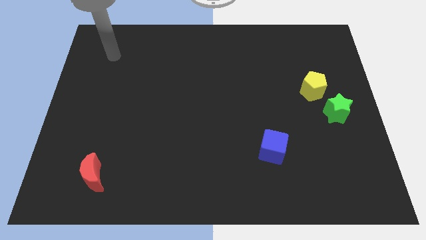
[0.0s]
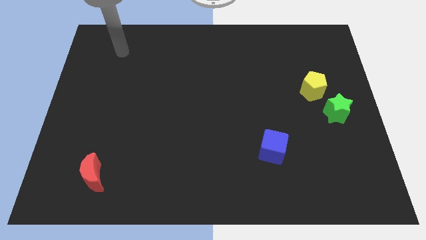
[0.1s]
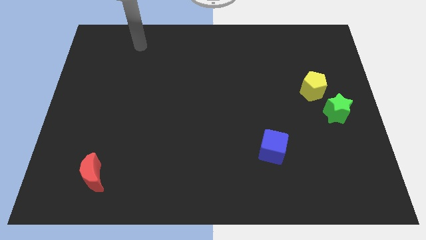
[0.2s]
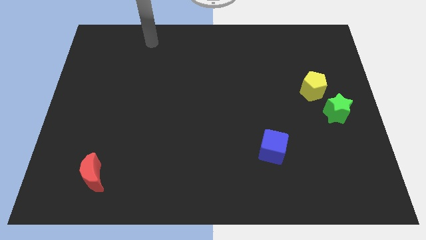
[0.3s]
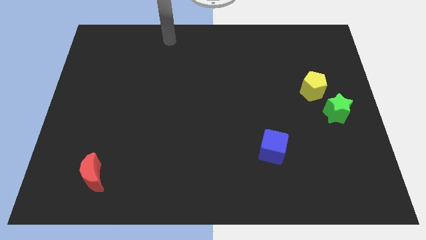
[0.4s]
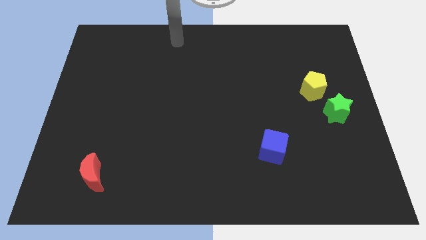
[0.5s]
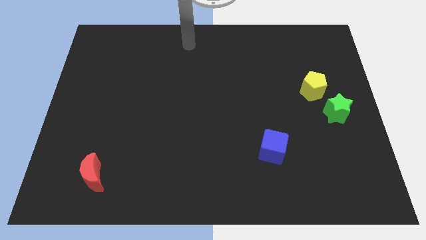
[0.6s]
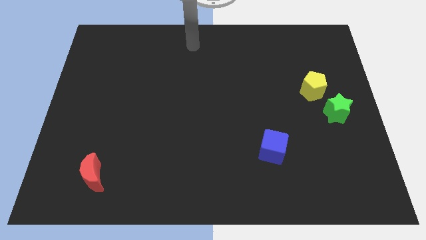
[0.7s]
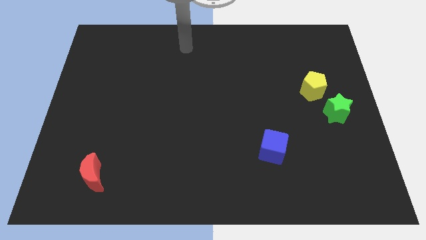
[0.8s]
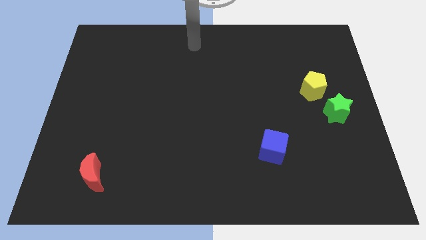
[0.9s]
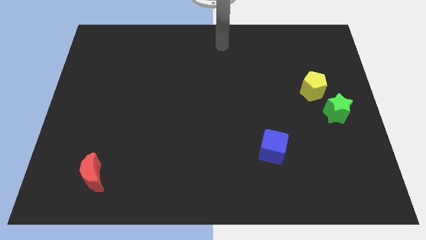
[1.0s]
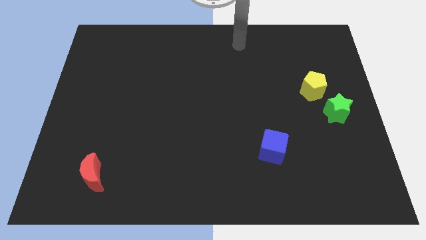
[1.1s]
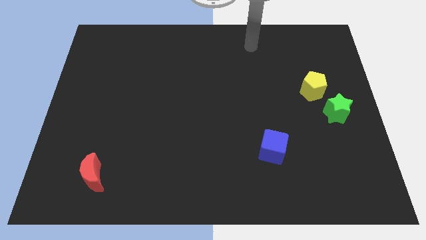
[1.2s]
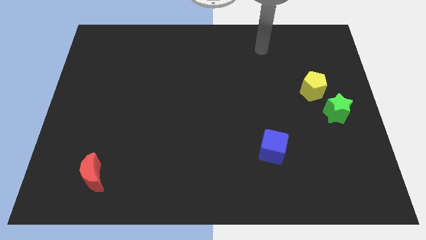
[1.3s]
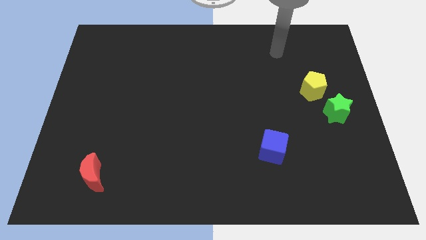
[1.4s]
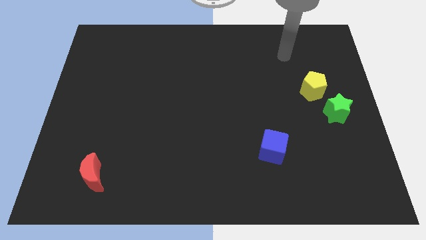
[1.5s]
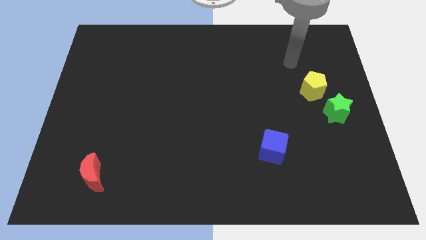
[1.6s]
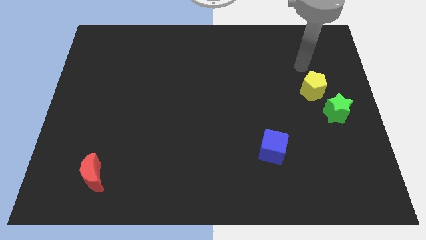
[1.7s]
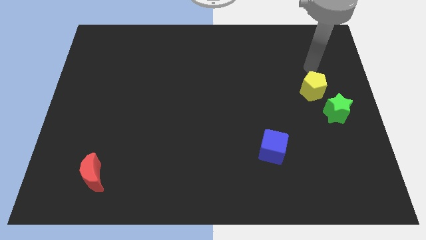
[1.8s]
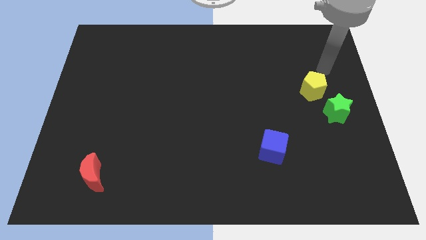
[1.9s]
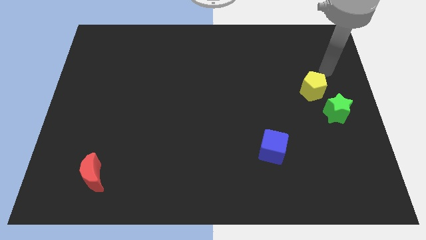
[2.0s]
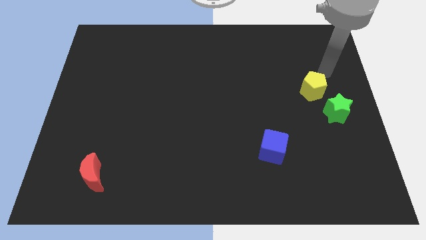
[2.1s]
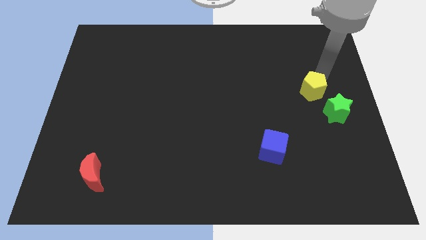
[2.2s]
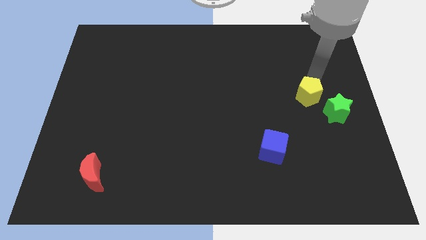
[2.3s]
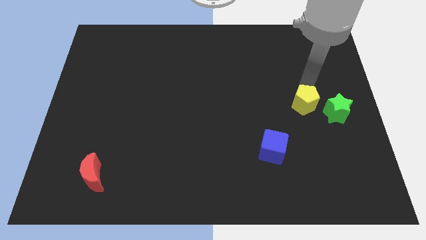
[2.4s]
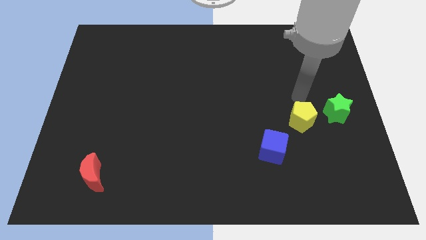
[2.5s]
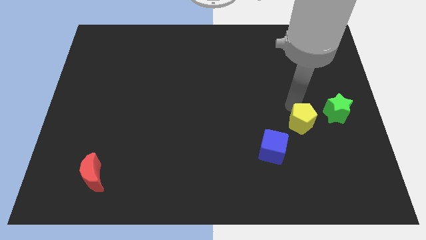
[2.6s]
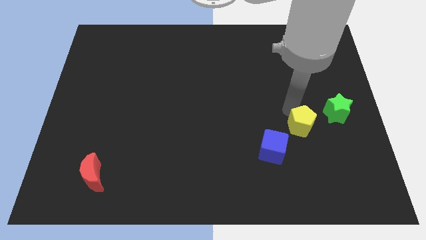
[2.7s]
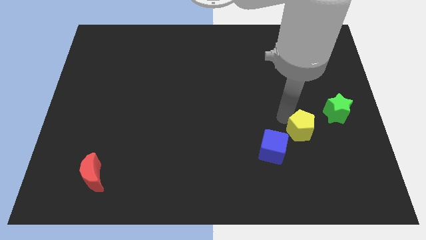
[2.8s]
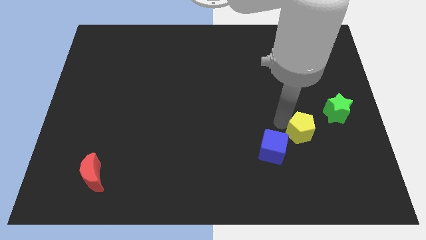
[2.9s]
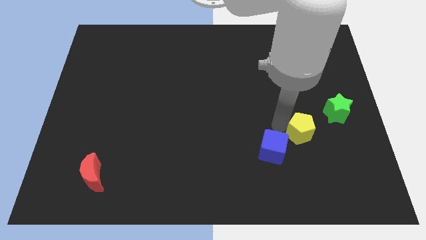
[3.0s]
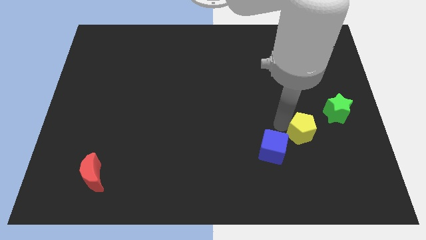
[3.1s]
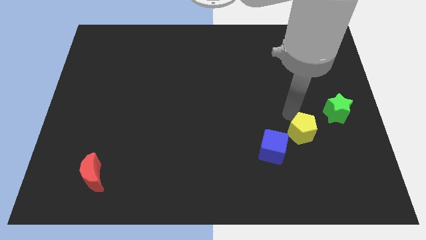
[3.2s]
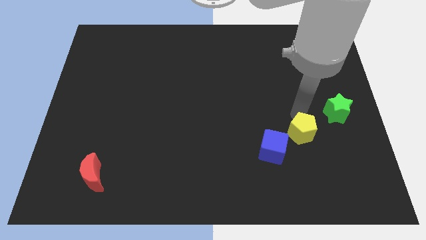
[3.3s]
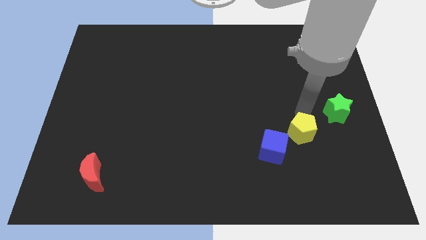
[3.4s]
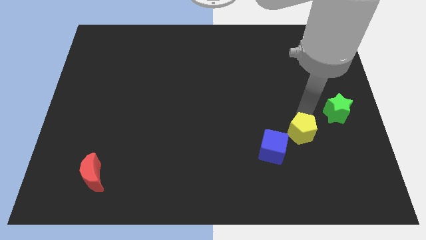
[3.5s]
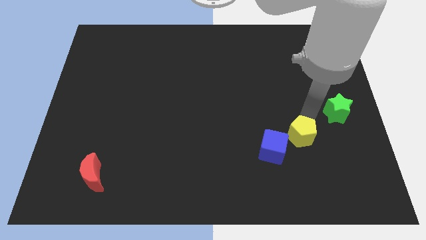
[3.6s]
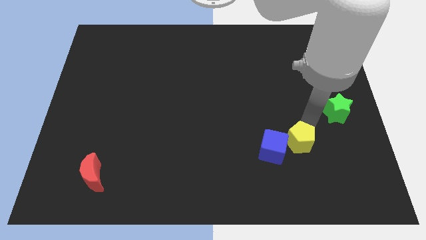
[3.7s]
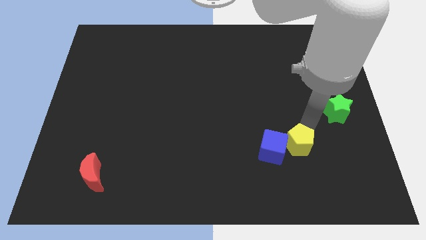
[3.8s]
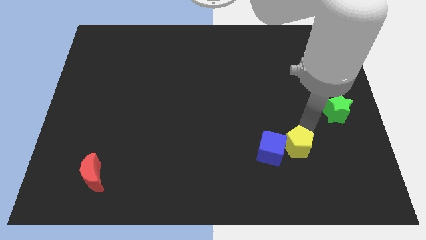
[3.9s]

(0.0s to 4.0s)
put the pentagon to the blue block

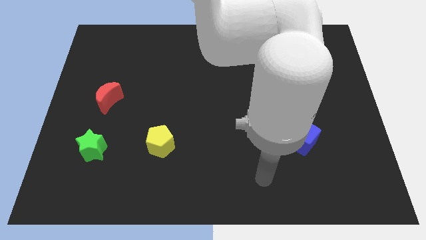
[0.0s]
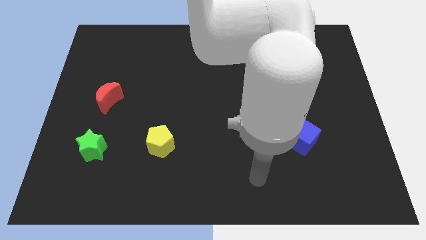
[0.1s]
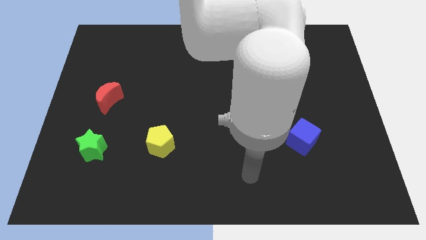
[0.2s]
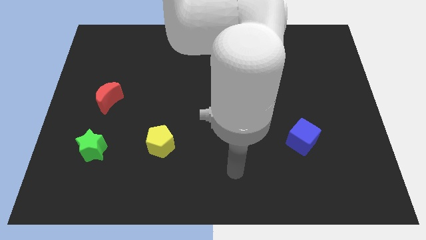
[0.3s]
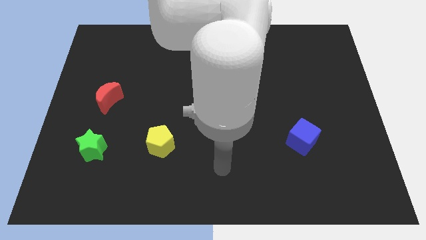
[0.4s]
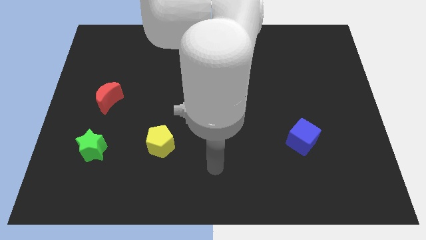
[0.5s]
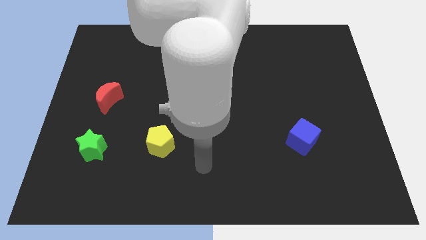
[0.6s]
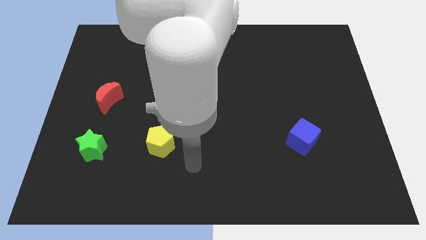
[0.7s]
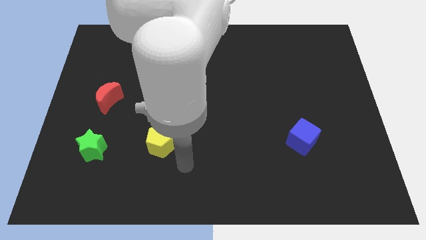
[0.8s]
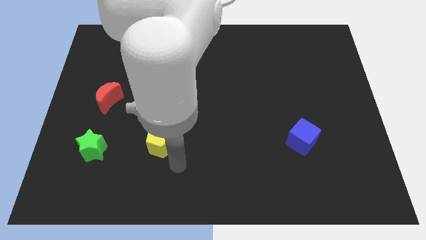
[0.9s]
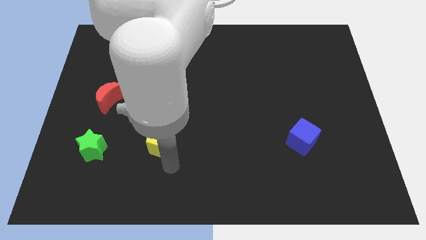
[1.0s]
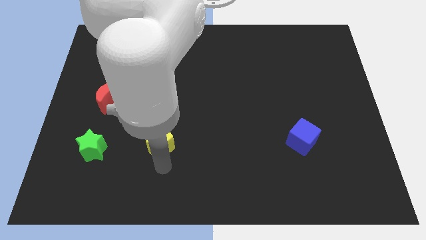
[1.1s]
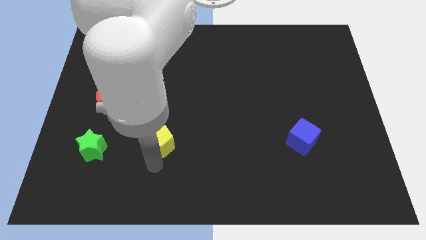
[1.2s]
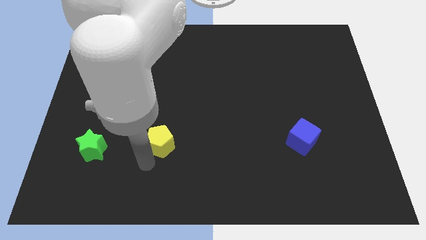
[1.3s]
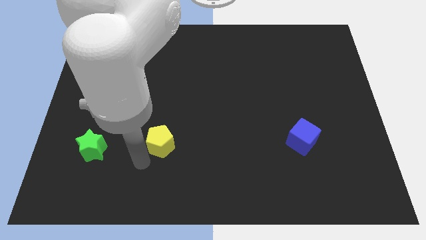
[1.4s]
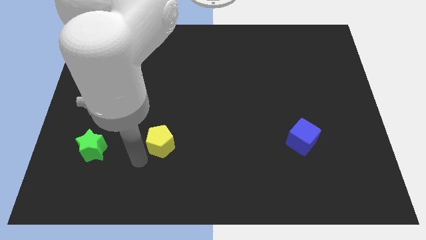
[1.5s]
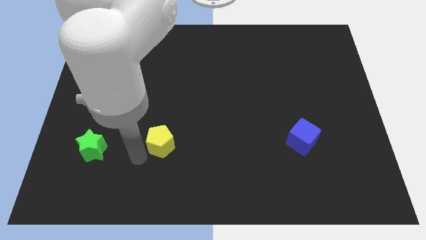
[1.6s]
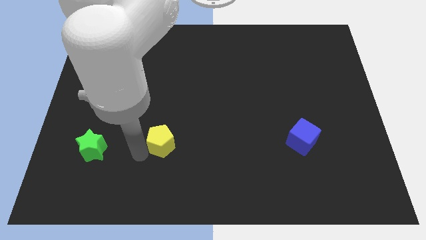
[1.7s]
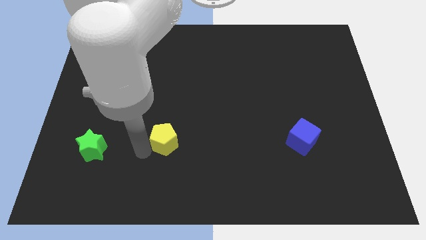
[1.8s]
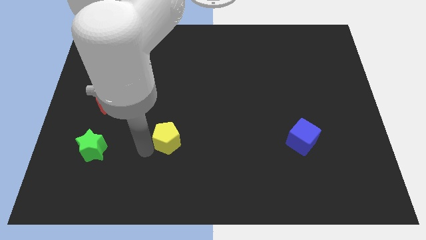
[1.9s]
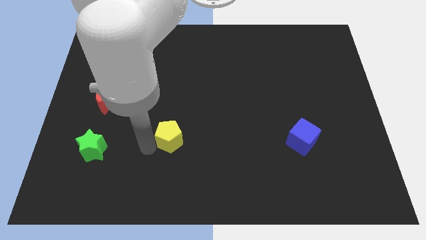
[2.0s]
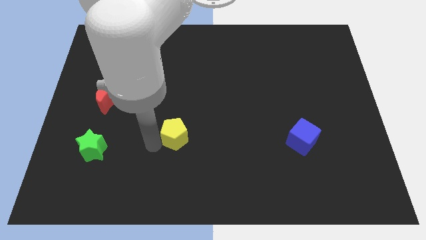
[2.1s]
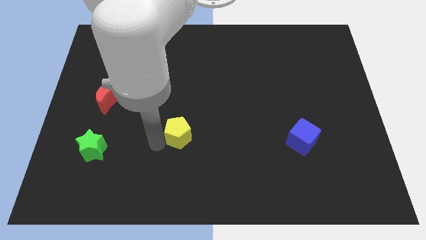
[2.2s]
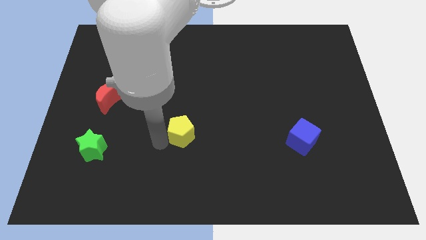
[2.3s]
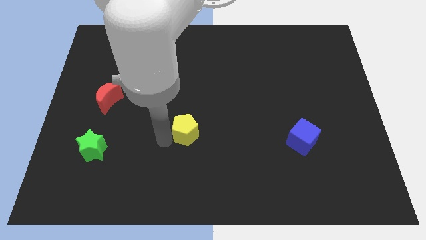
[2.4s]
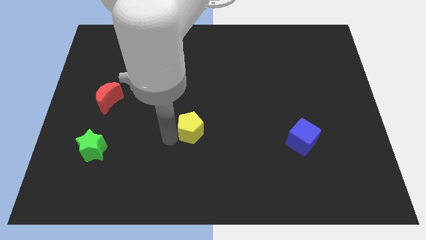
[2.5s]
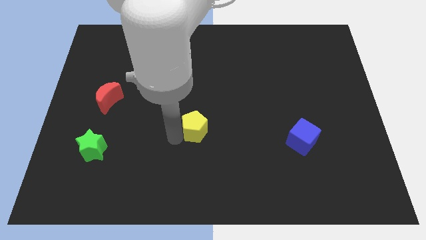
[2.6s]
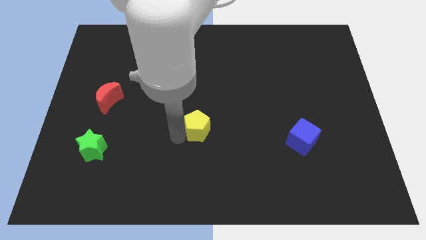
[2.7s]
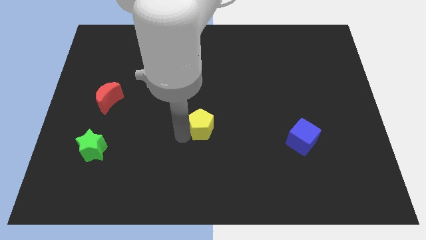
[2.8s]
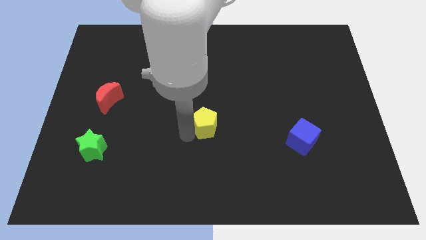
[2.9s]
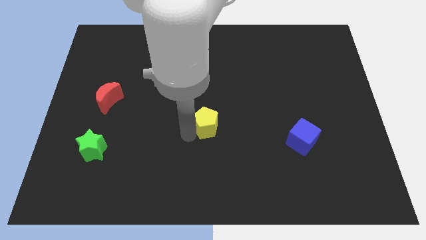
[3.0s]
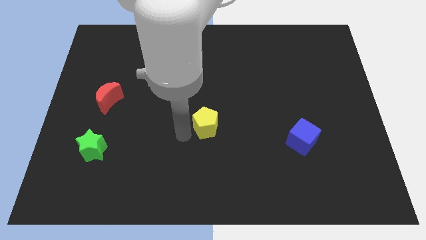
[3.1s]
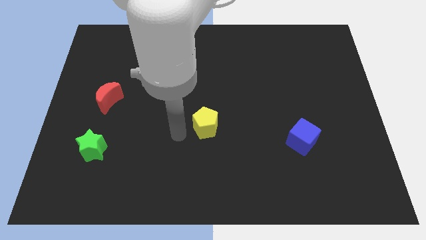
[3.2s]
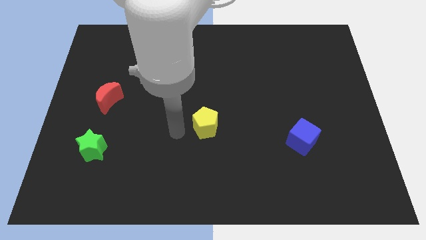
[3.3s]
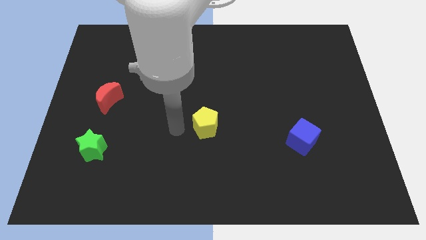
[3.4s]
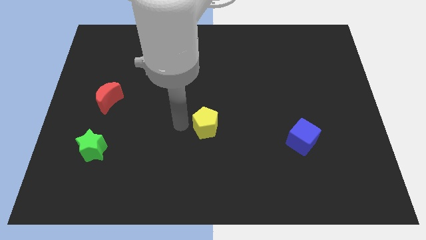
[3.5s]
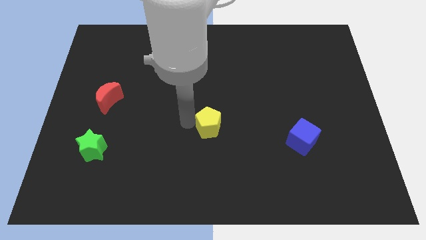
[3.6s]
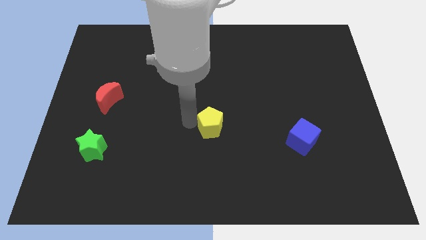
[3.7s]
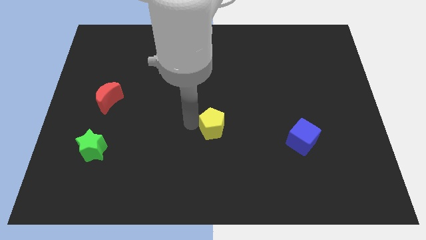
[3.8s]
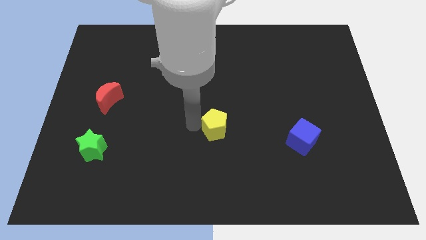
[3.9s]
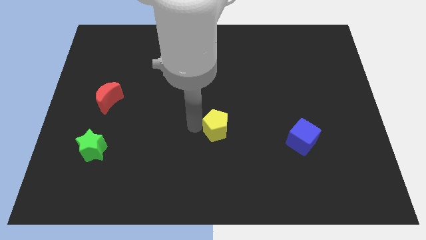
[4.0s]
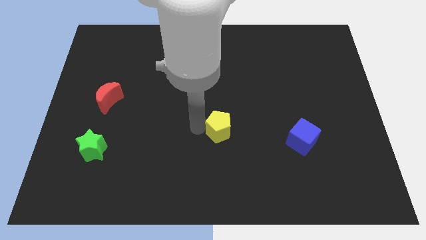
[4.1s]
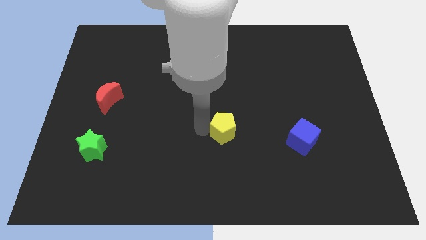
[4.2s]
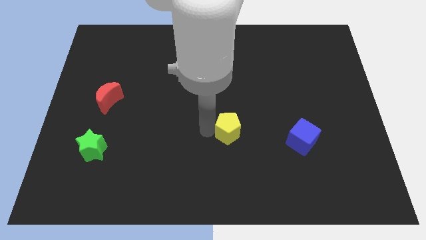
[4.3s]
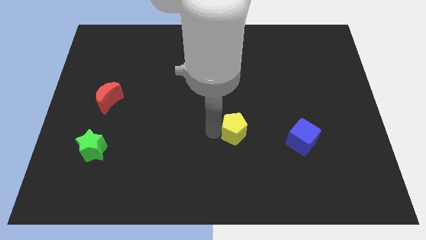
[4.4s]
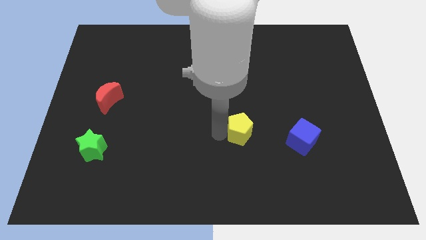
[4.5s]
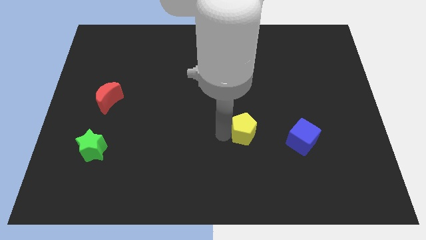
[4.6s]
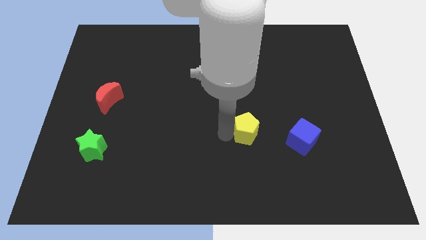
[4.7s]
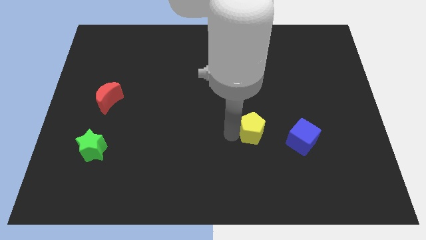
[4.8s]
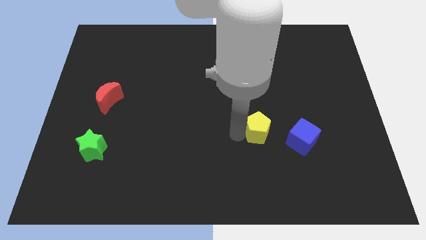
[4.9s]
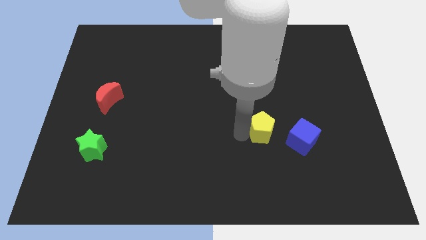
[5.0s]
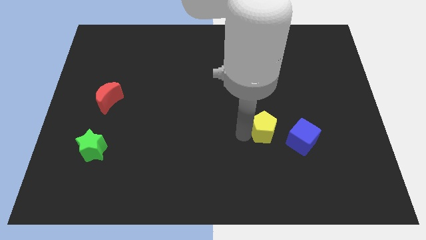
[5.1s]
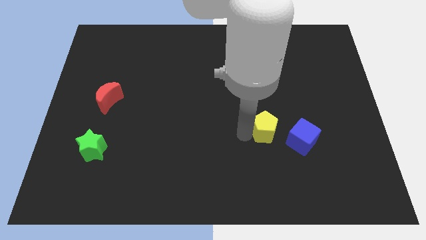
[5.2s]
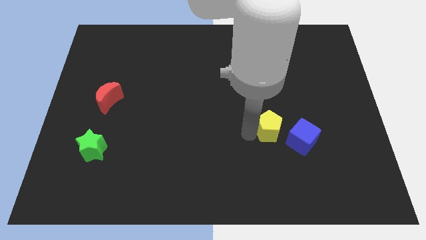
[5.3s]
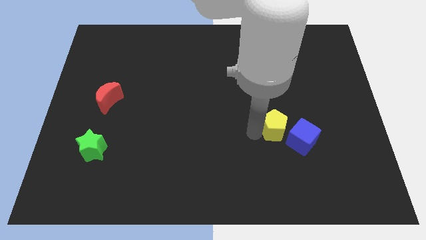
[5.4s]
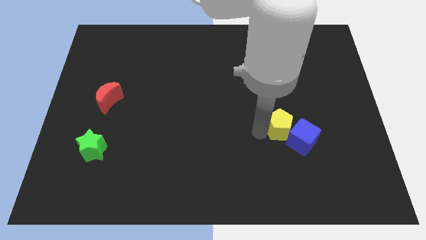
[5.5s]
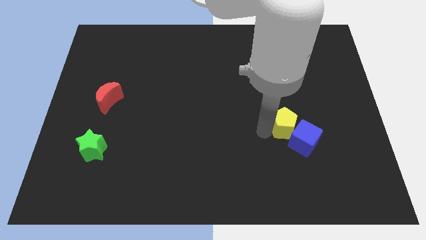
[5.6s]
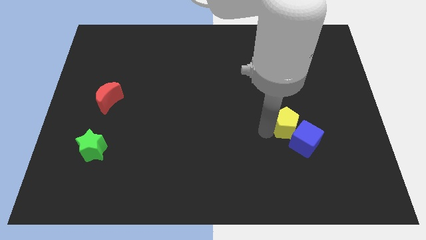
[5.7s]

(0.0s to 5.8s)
slide the yellow pentagon towards the cube
